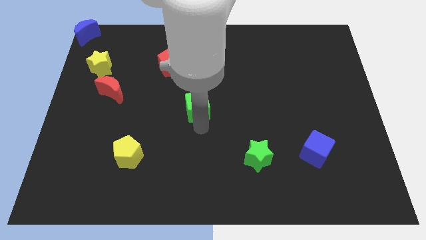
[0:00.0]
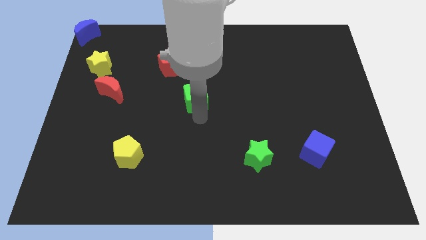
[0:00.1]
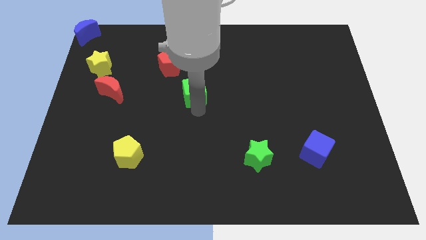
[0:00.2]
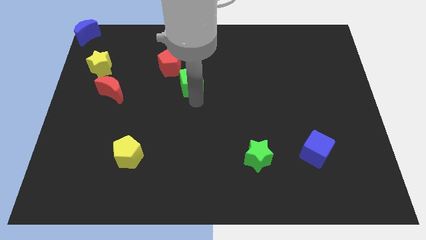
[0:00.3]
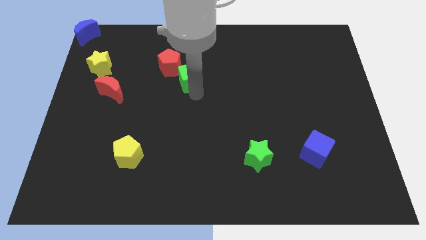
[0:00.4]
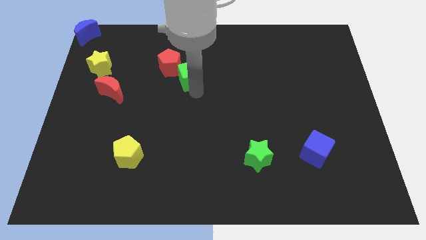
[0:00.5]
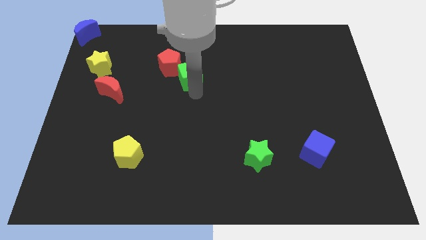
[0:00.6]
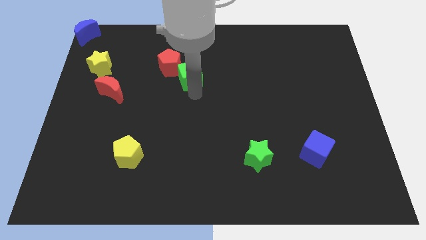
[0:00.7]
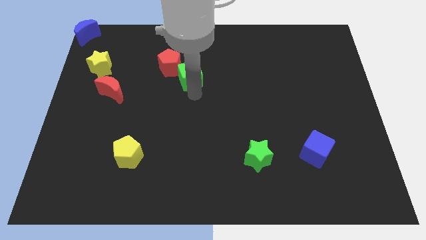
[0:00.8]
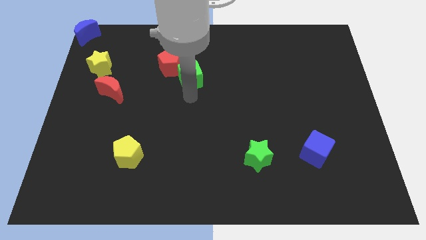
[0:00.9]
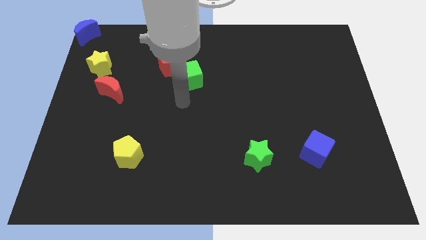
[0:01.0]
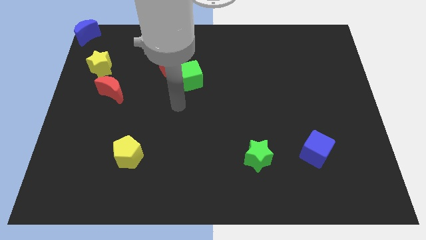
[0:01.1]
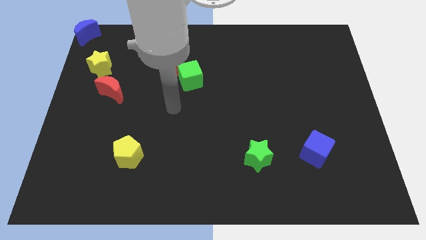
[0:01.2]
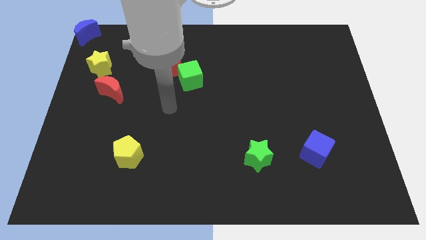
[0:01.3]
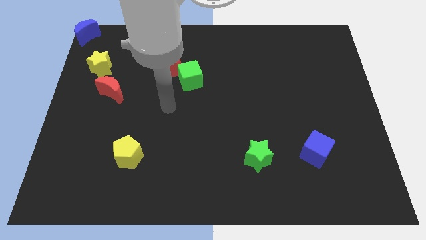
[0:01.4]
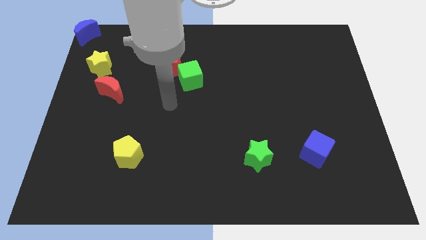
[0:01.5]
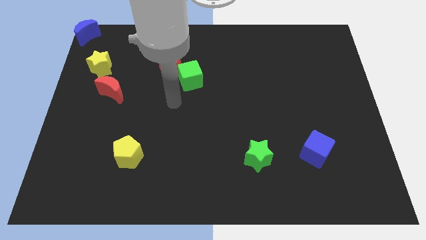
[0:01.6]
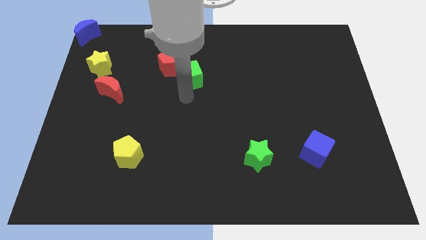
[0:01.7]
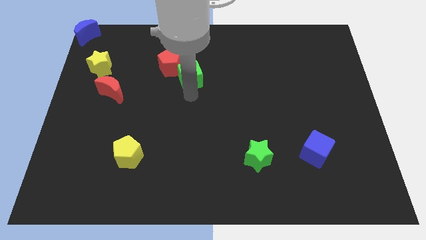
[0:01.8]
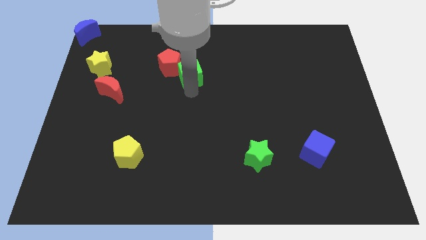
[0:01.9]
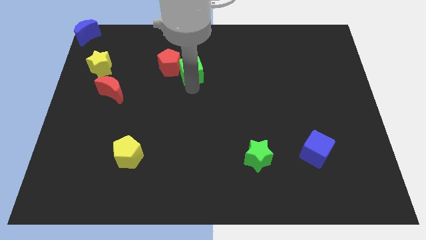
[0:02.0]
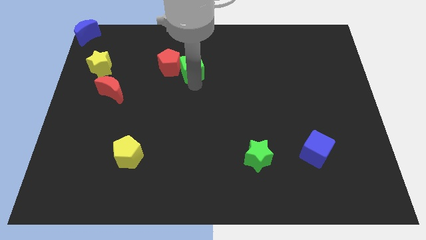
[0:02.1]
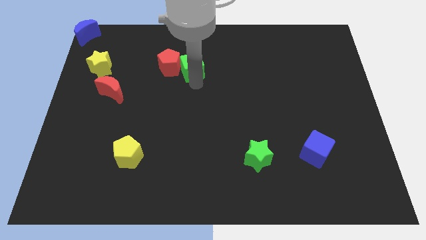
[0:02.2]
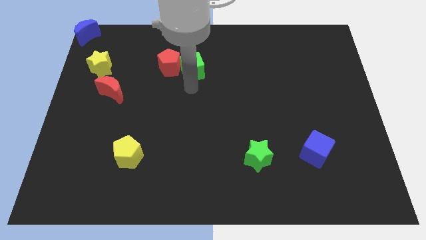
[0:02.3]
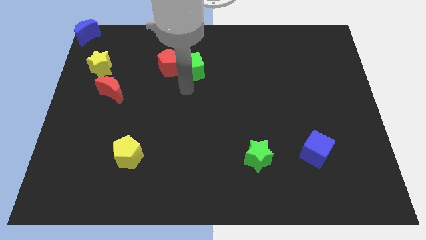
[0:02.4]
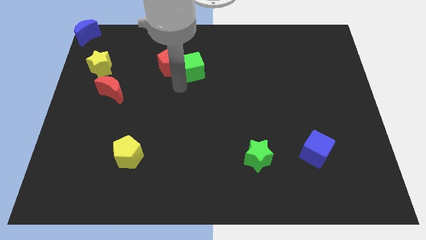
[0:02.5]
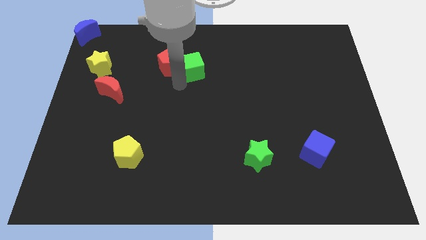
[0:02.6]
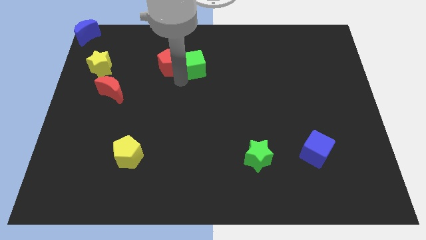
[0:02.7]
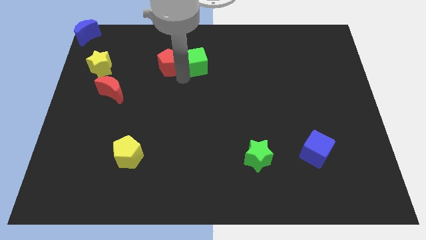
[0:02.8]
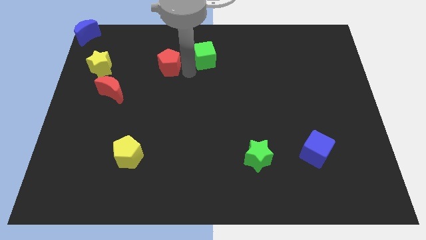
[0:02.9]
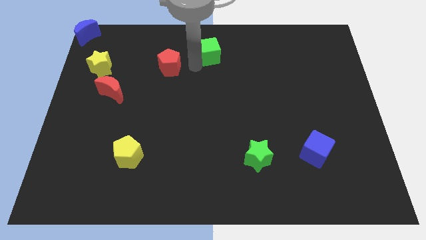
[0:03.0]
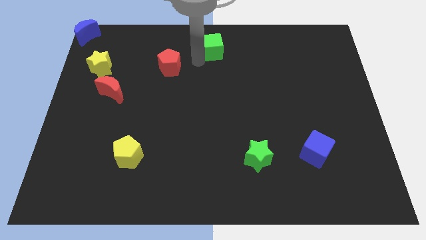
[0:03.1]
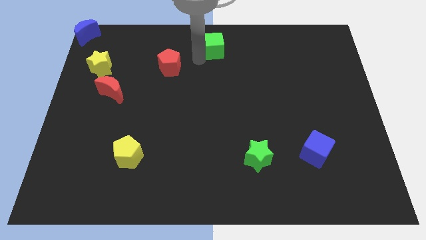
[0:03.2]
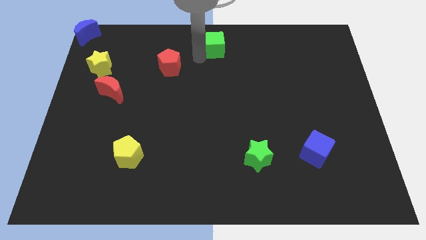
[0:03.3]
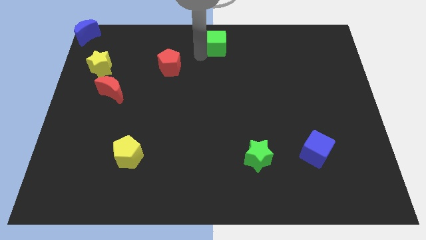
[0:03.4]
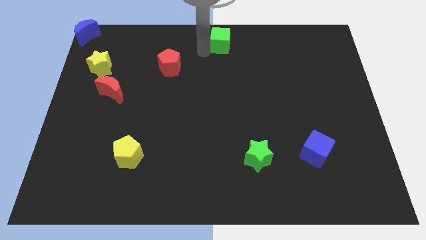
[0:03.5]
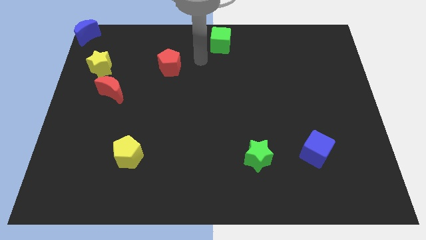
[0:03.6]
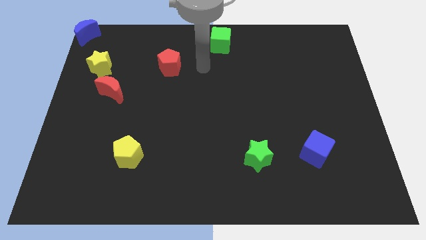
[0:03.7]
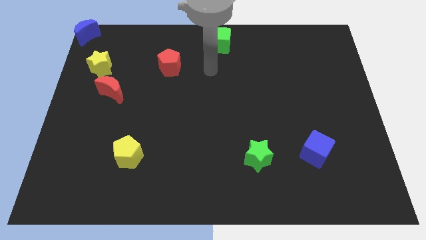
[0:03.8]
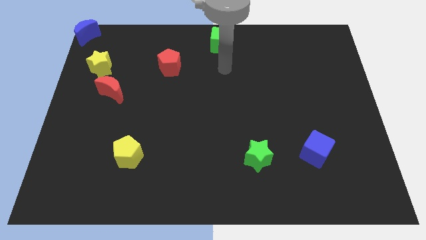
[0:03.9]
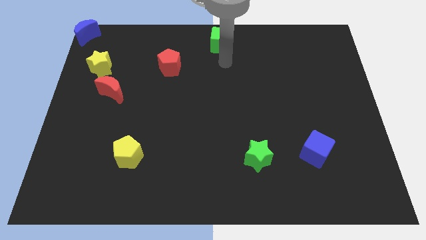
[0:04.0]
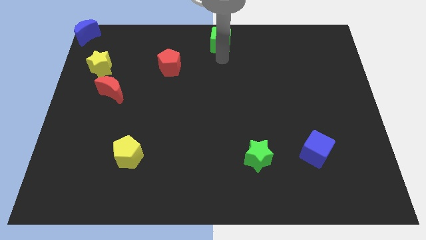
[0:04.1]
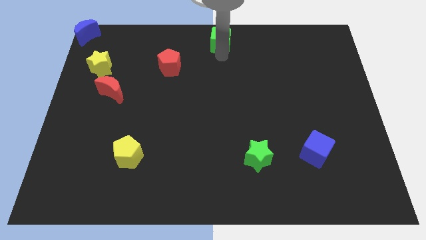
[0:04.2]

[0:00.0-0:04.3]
put the green cube at the top center of the board

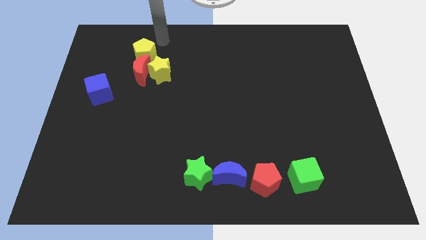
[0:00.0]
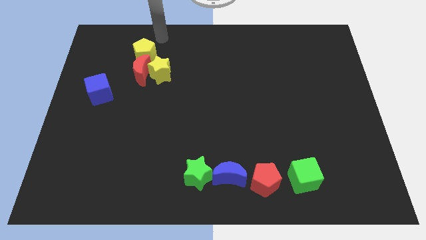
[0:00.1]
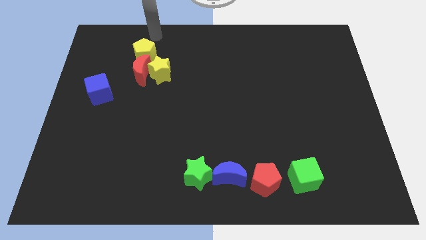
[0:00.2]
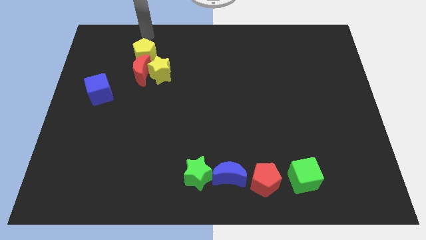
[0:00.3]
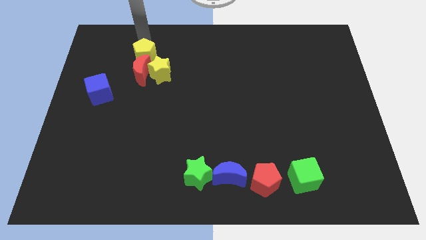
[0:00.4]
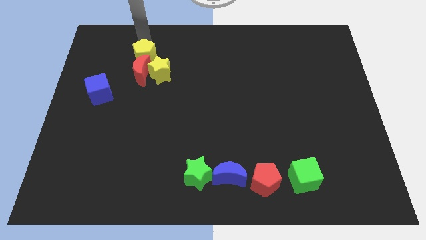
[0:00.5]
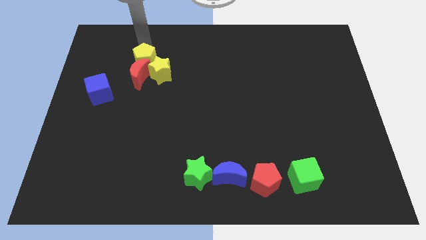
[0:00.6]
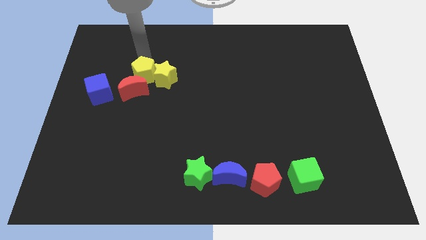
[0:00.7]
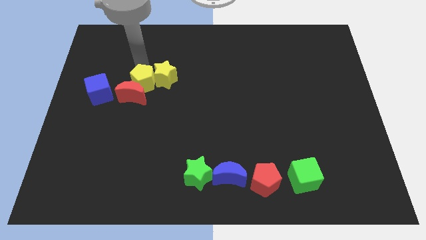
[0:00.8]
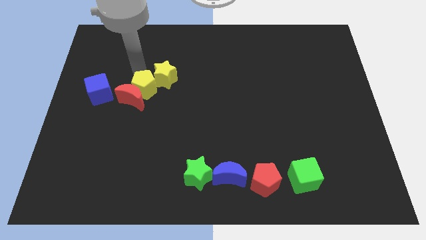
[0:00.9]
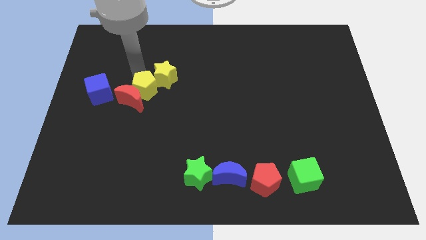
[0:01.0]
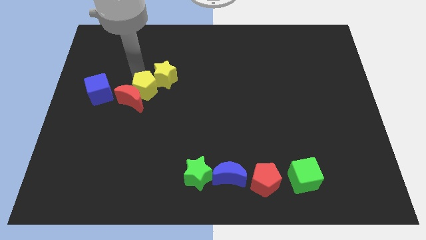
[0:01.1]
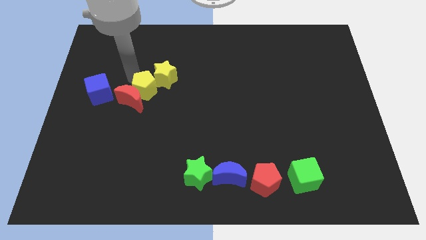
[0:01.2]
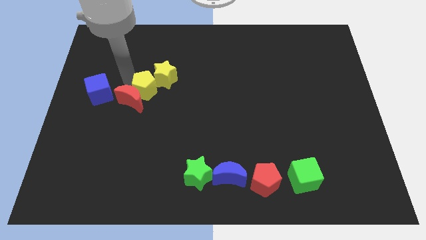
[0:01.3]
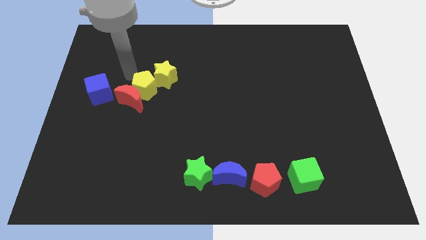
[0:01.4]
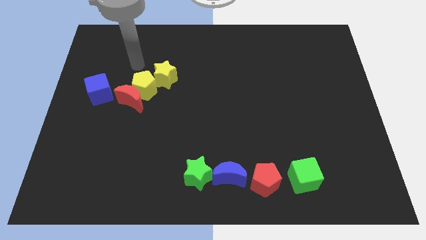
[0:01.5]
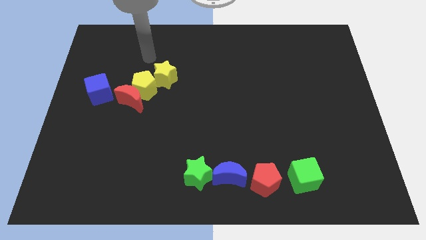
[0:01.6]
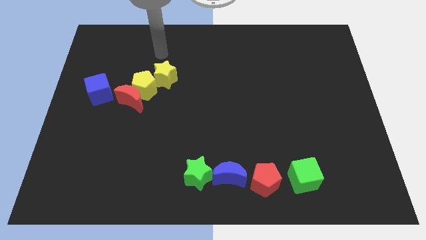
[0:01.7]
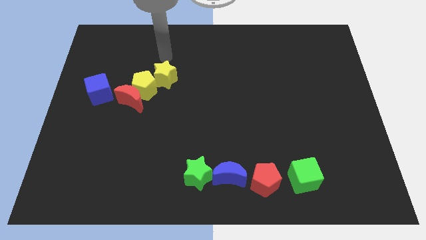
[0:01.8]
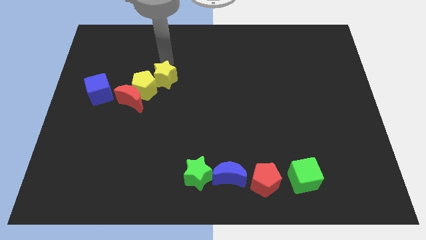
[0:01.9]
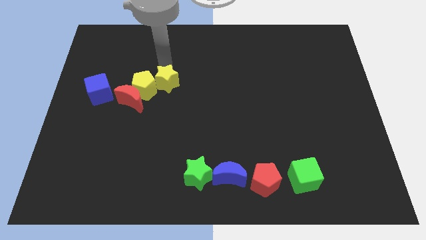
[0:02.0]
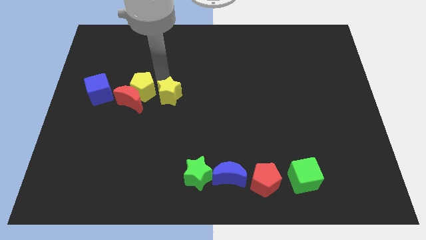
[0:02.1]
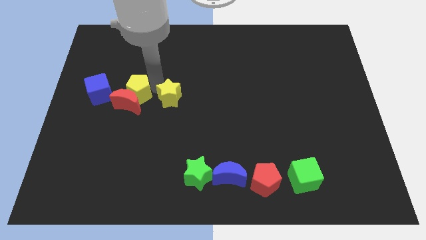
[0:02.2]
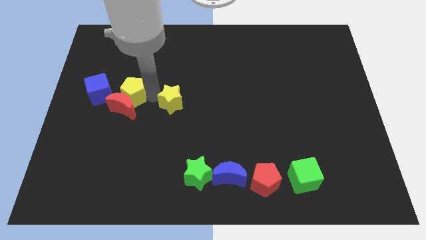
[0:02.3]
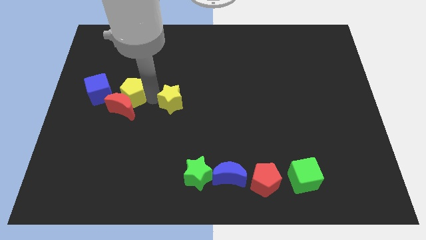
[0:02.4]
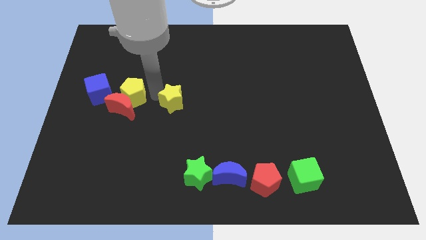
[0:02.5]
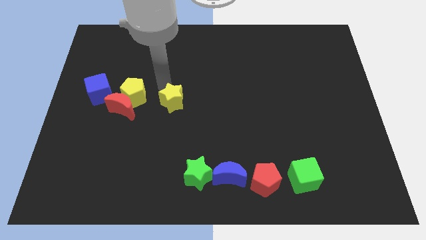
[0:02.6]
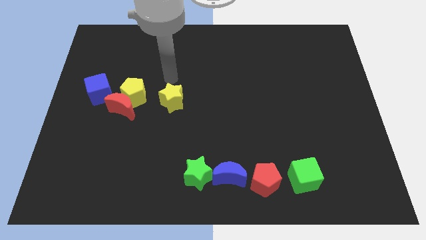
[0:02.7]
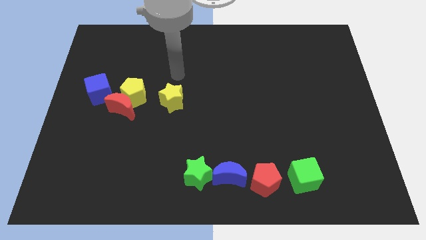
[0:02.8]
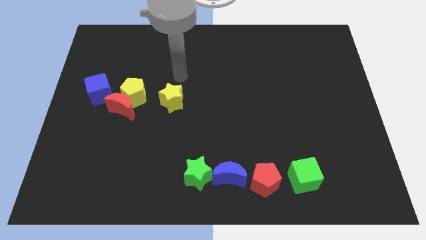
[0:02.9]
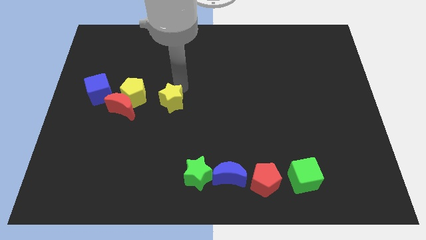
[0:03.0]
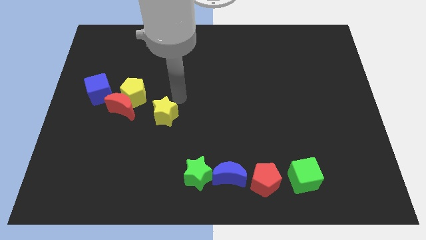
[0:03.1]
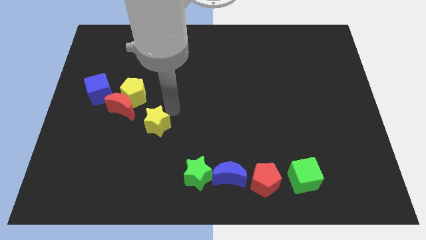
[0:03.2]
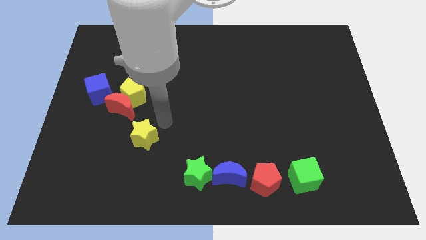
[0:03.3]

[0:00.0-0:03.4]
drag the yellow pentagon yellow star red crescent to bottom side

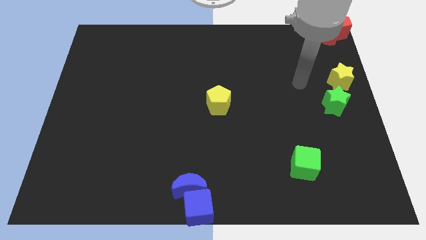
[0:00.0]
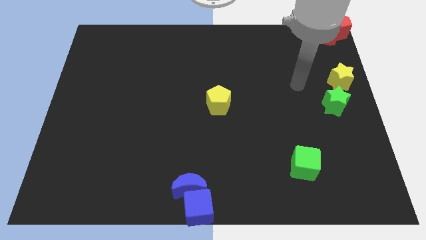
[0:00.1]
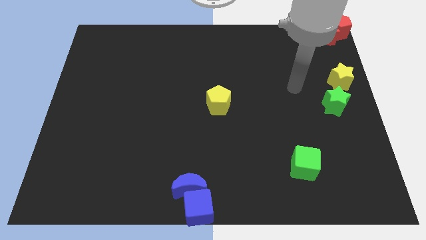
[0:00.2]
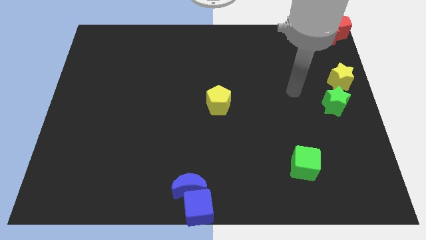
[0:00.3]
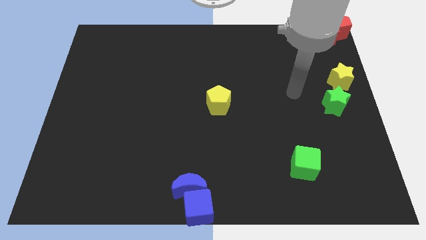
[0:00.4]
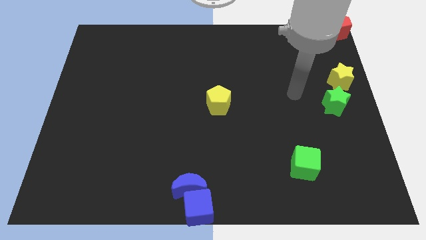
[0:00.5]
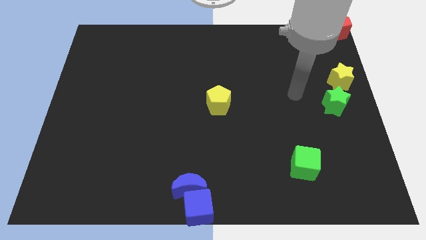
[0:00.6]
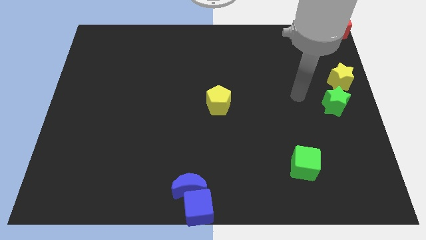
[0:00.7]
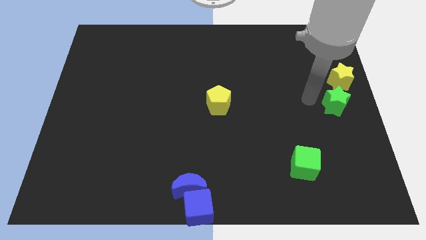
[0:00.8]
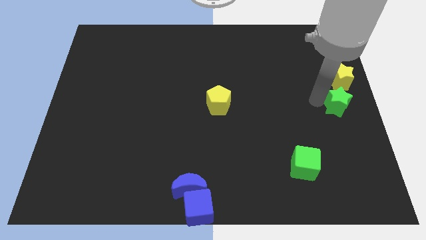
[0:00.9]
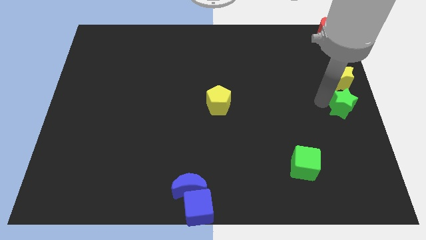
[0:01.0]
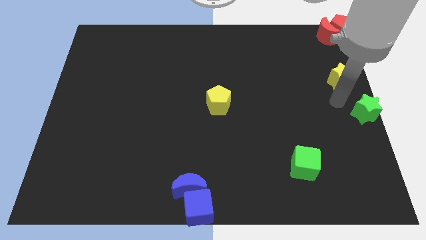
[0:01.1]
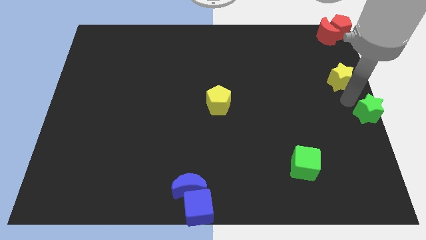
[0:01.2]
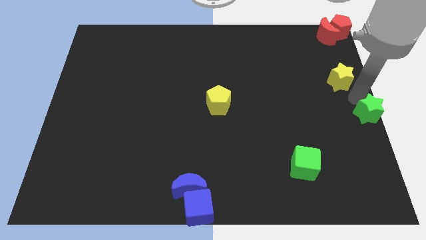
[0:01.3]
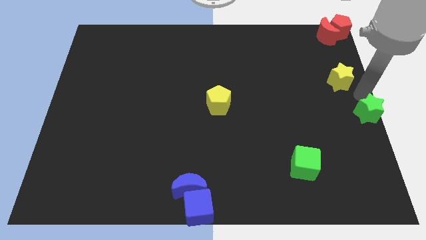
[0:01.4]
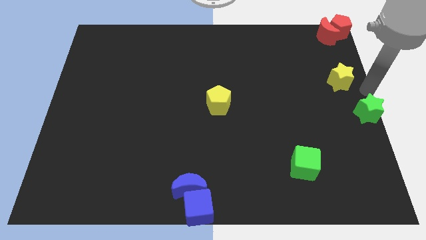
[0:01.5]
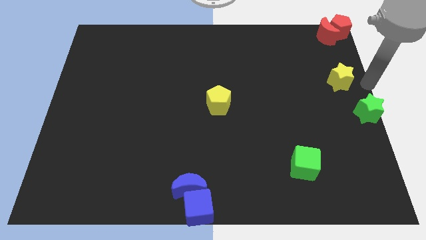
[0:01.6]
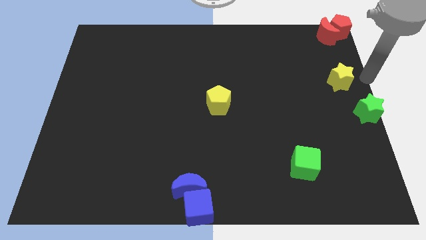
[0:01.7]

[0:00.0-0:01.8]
place the green star to the right center of the board
